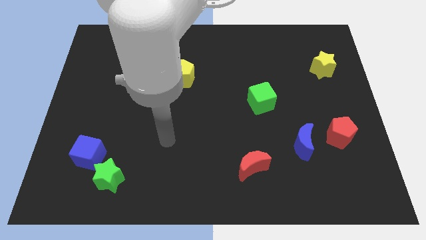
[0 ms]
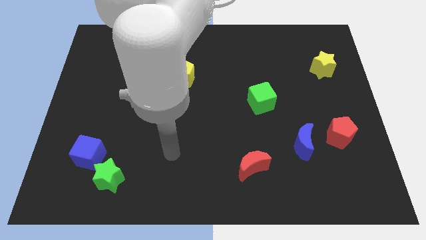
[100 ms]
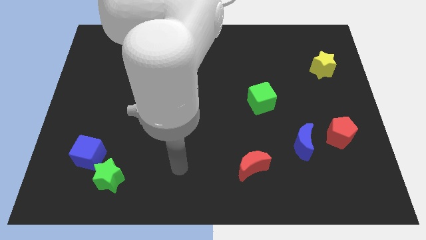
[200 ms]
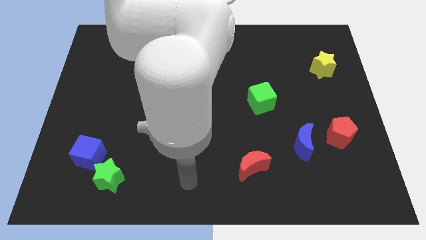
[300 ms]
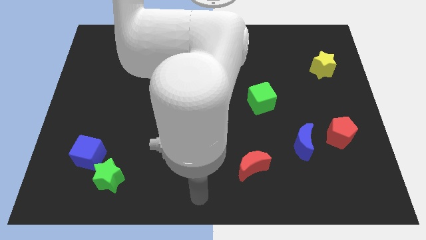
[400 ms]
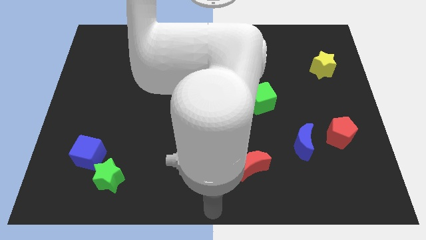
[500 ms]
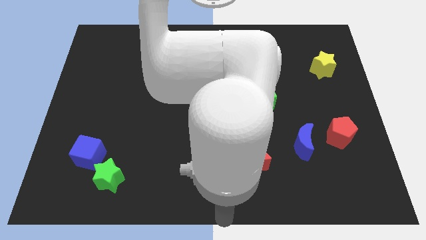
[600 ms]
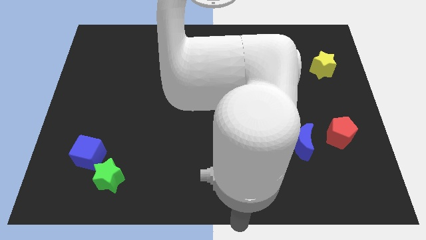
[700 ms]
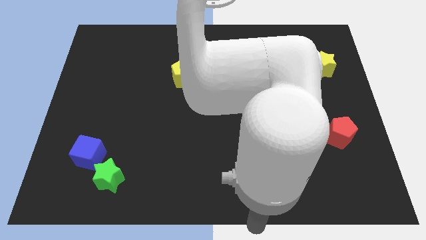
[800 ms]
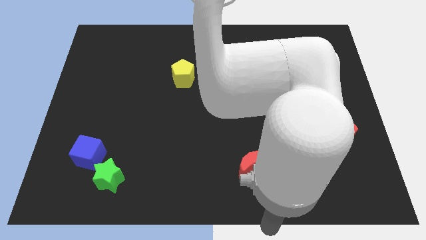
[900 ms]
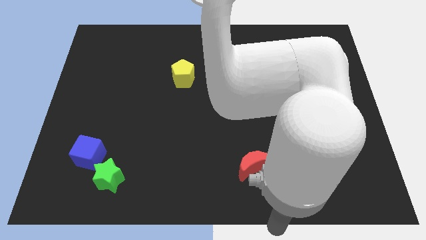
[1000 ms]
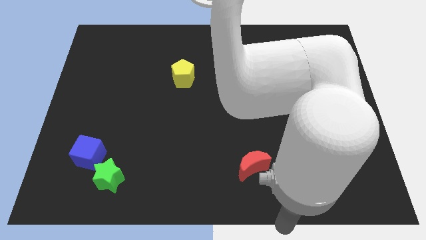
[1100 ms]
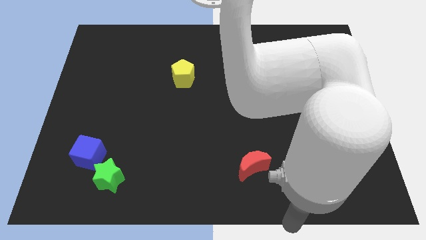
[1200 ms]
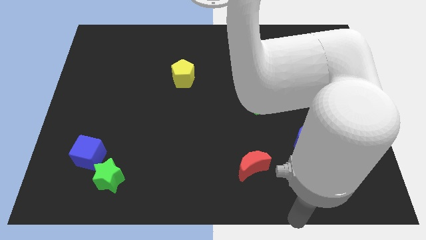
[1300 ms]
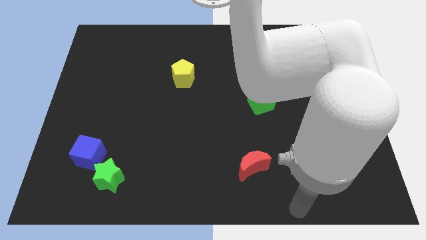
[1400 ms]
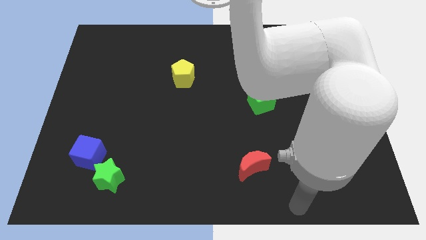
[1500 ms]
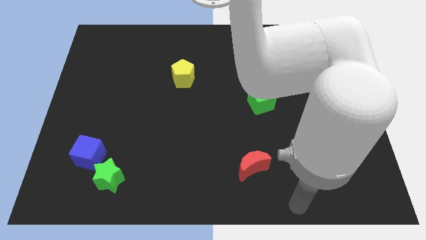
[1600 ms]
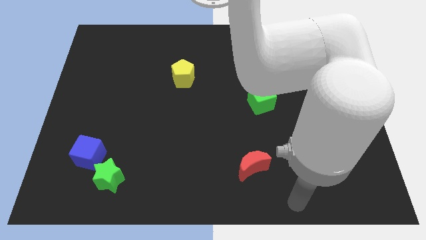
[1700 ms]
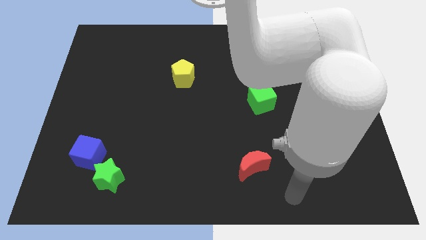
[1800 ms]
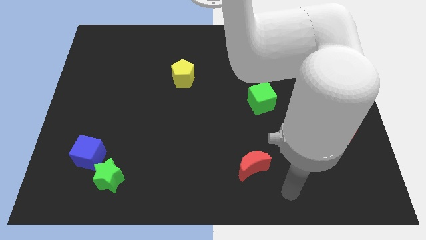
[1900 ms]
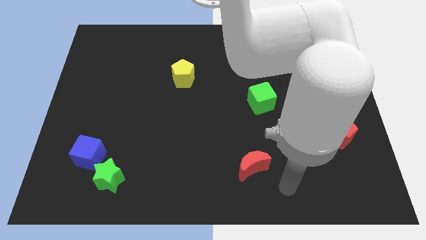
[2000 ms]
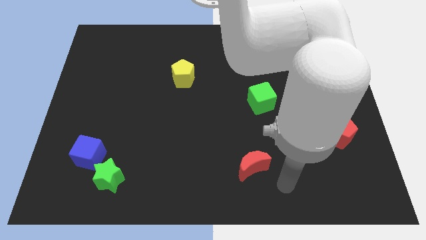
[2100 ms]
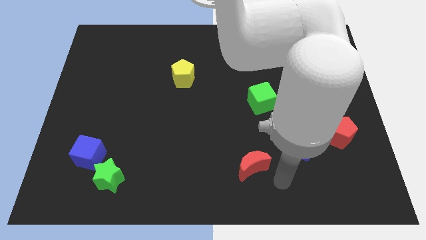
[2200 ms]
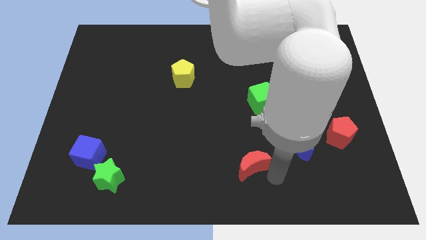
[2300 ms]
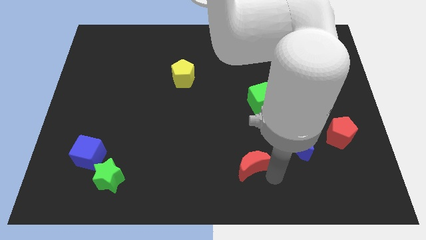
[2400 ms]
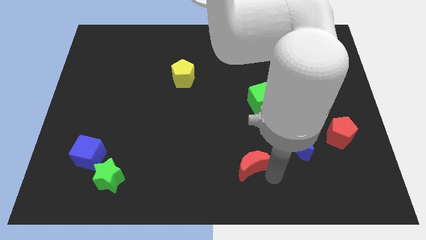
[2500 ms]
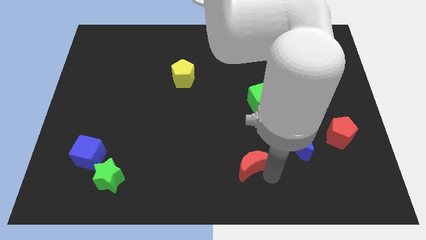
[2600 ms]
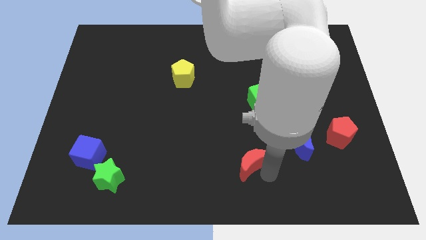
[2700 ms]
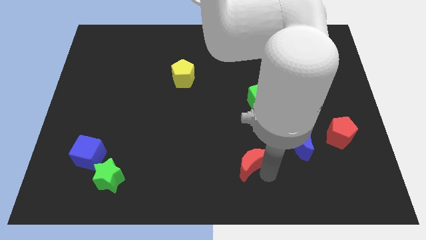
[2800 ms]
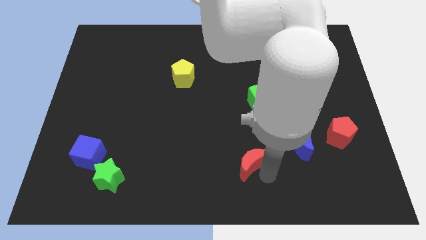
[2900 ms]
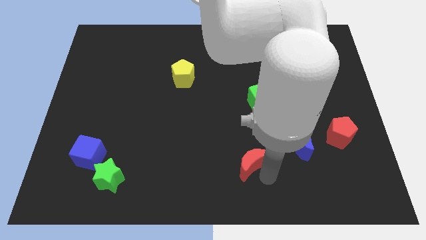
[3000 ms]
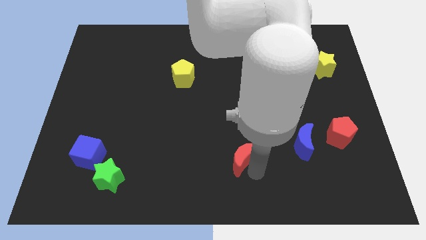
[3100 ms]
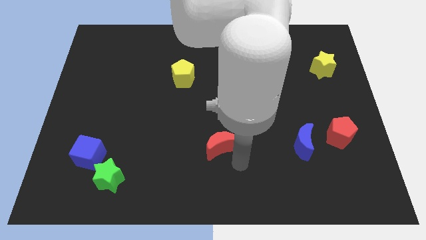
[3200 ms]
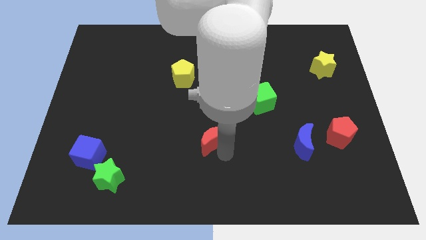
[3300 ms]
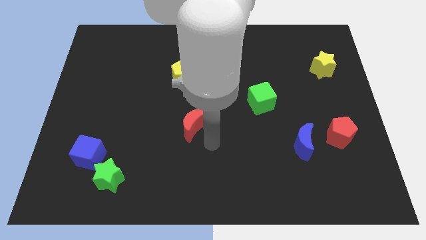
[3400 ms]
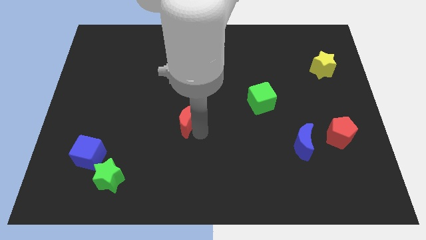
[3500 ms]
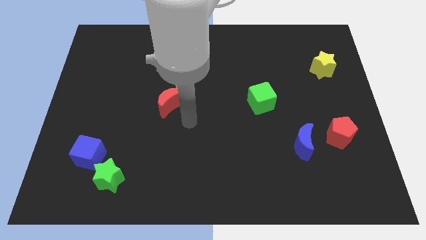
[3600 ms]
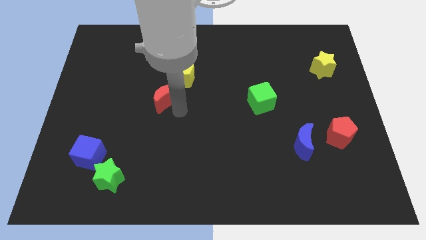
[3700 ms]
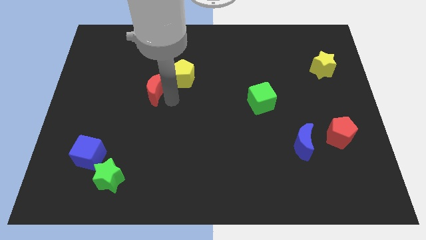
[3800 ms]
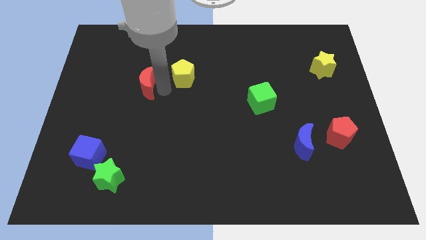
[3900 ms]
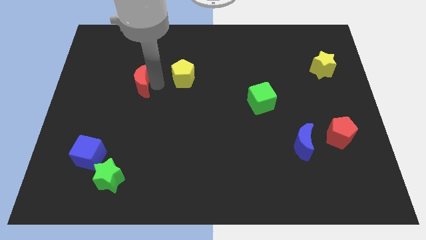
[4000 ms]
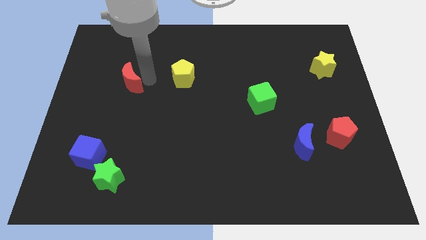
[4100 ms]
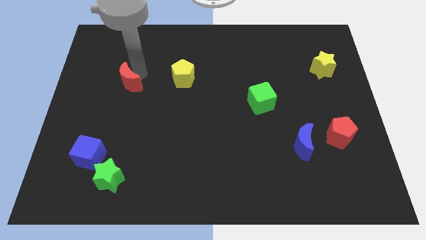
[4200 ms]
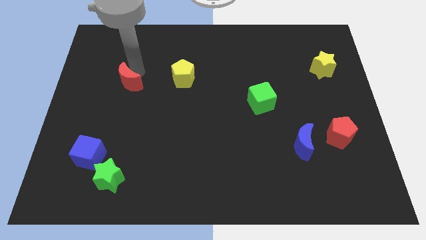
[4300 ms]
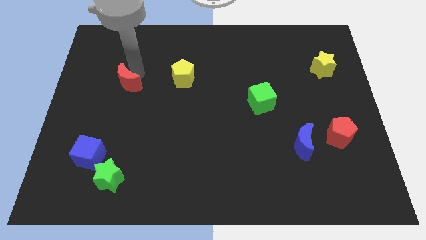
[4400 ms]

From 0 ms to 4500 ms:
push red crescent towards the top left of the board

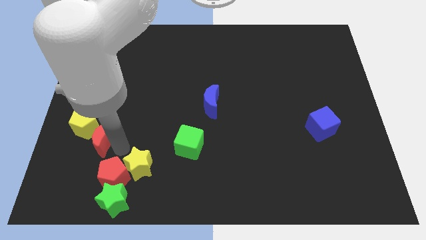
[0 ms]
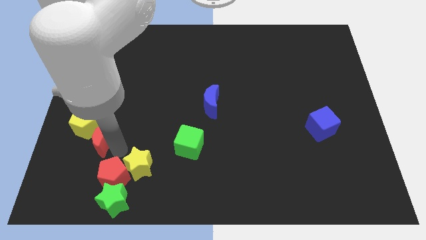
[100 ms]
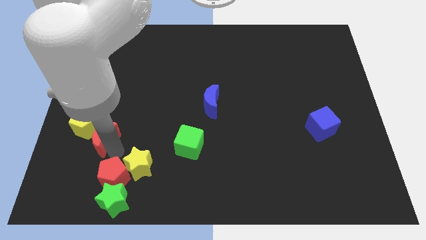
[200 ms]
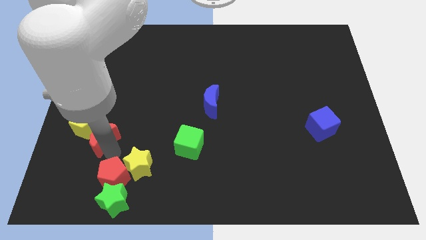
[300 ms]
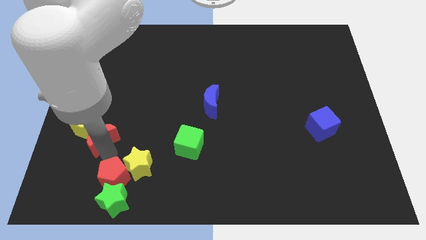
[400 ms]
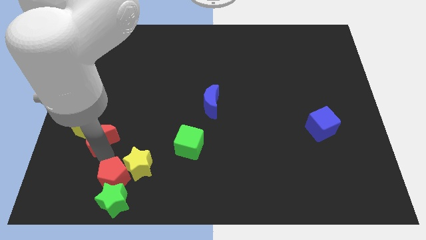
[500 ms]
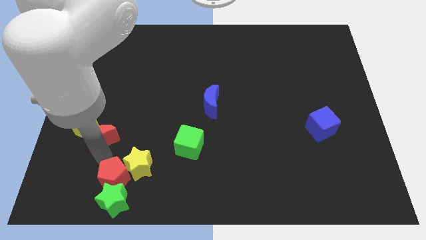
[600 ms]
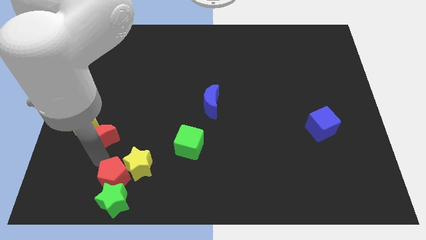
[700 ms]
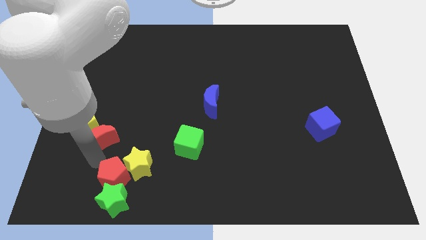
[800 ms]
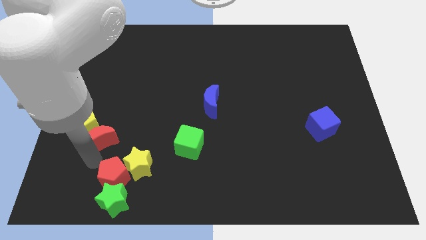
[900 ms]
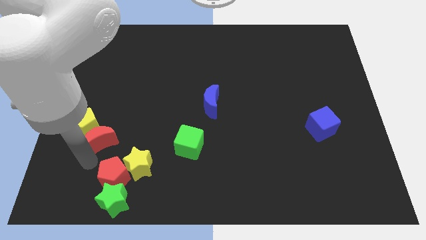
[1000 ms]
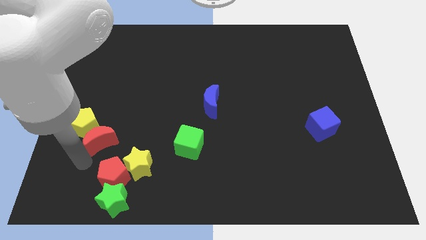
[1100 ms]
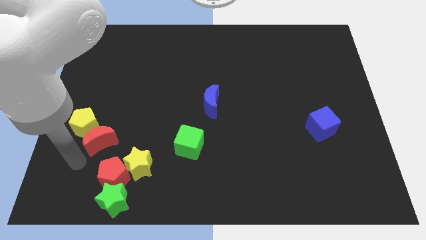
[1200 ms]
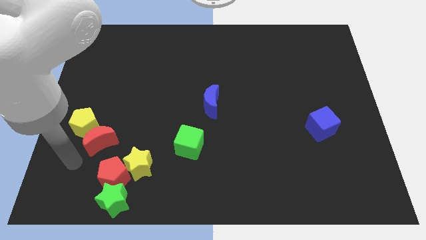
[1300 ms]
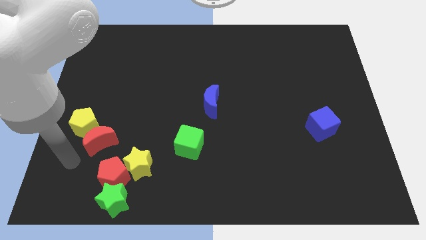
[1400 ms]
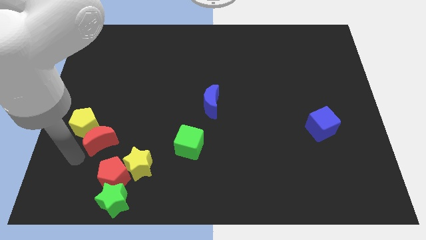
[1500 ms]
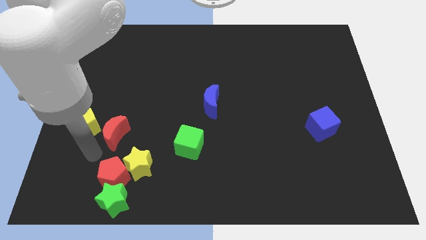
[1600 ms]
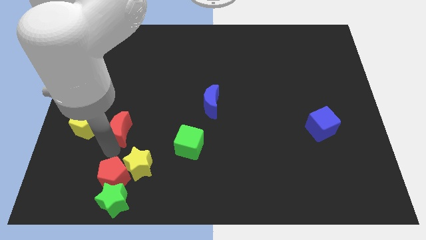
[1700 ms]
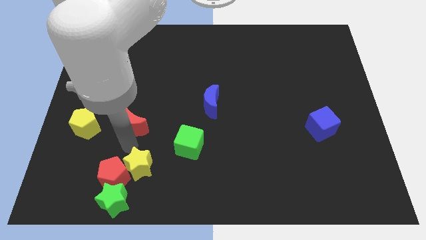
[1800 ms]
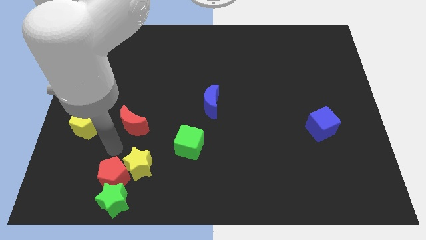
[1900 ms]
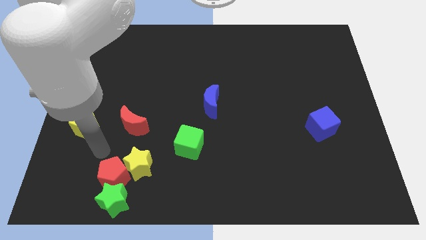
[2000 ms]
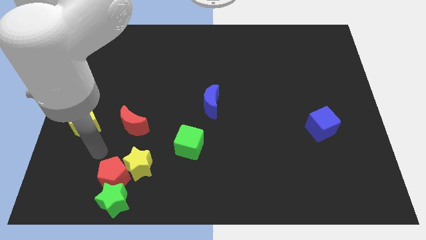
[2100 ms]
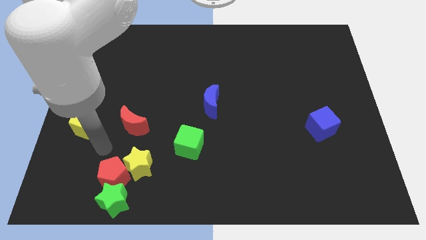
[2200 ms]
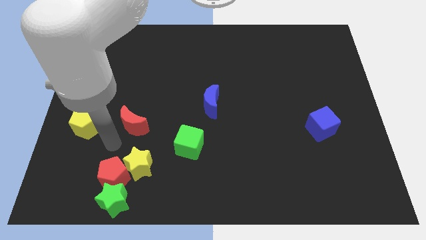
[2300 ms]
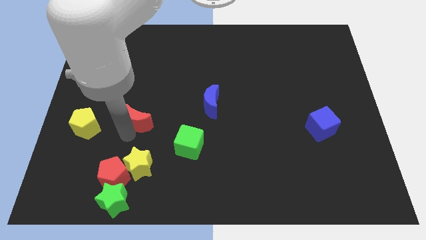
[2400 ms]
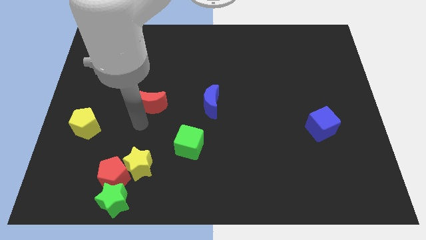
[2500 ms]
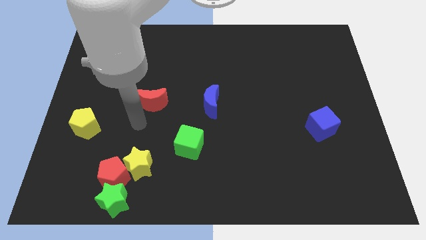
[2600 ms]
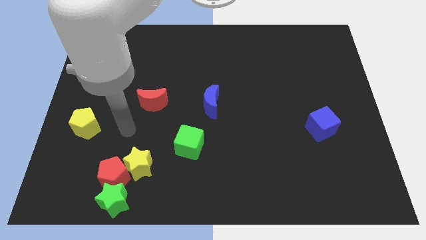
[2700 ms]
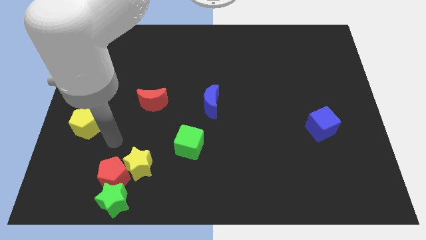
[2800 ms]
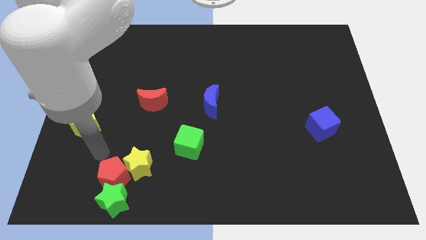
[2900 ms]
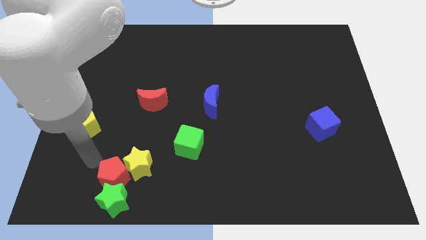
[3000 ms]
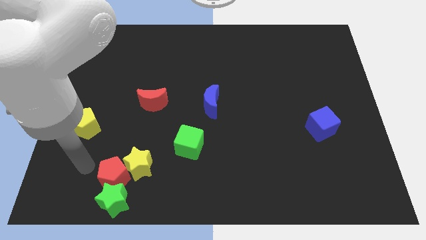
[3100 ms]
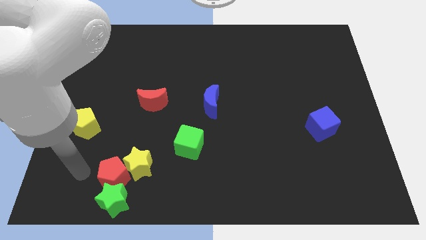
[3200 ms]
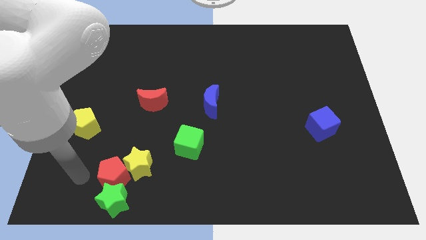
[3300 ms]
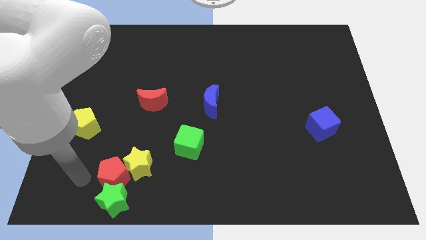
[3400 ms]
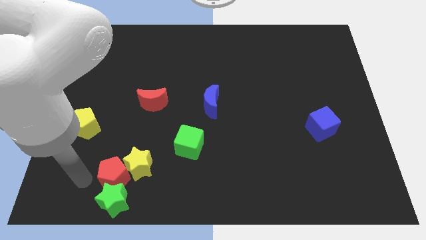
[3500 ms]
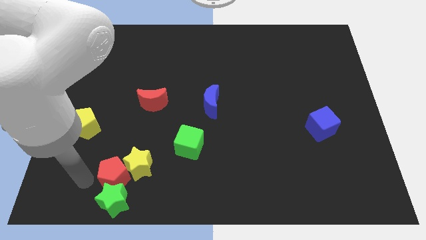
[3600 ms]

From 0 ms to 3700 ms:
push the red crescent up slightly

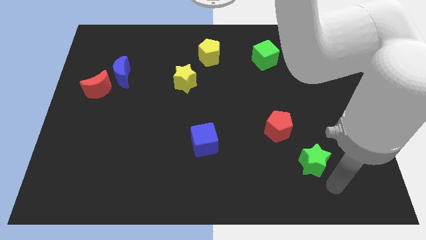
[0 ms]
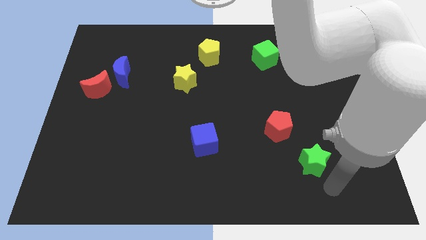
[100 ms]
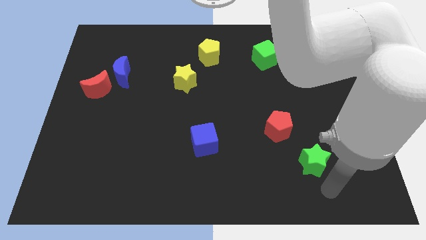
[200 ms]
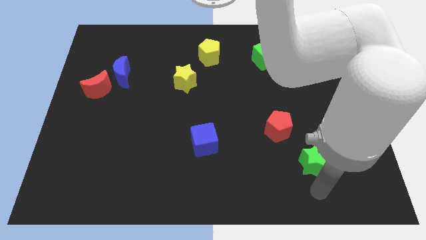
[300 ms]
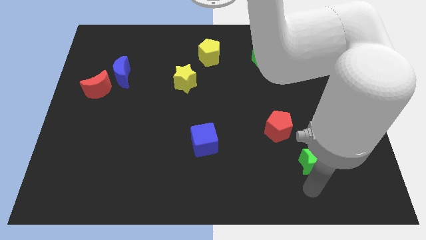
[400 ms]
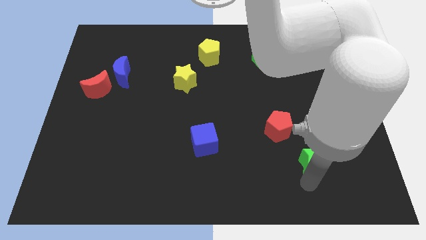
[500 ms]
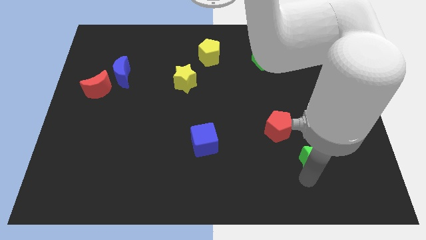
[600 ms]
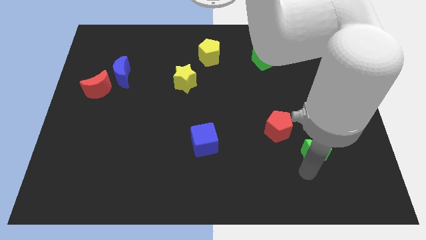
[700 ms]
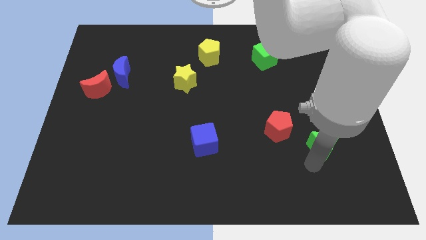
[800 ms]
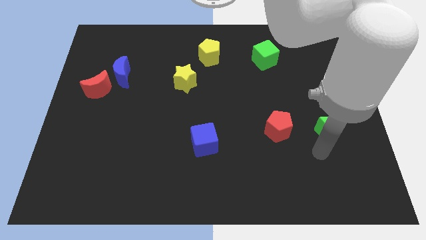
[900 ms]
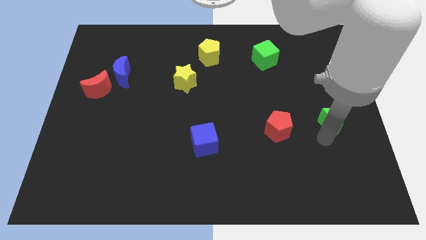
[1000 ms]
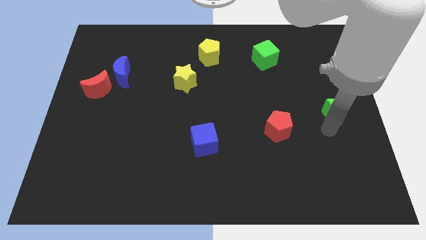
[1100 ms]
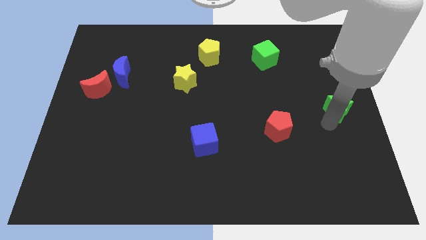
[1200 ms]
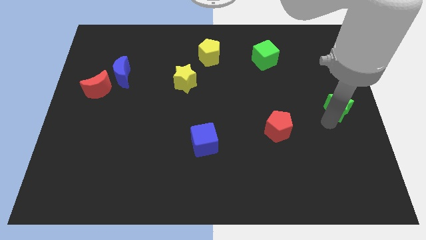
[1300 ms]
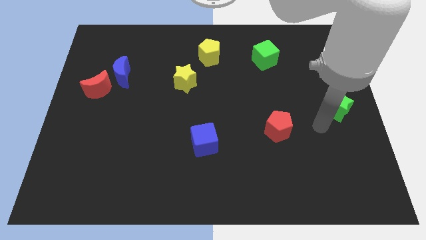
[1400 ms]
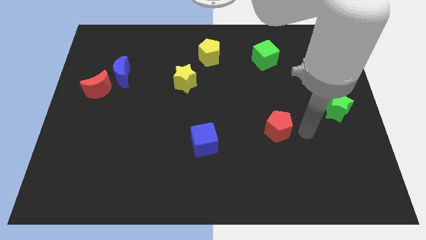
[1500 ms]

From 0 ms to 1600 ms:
push the green star towards the top right
